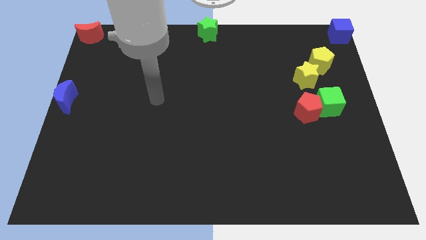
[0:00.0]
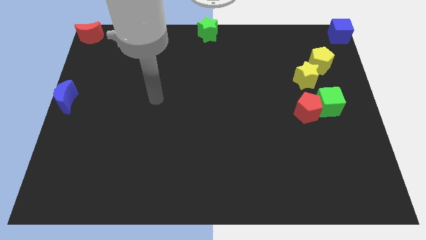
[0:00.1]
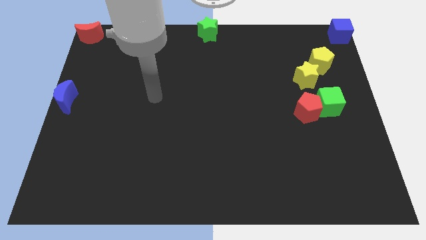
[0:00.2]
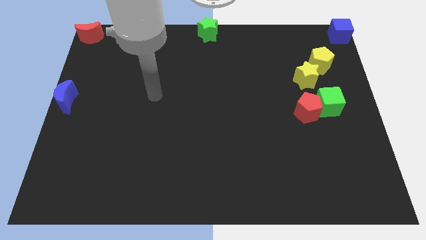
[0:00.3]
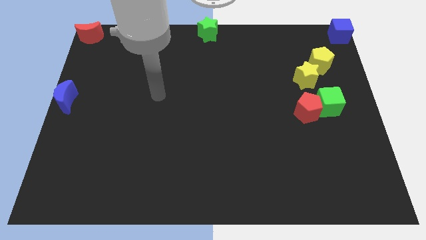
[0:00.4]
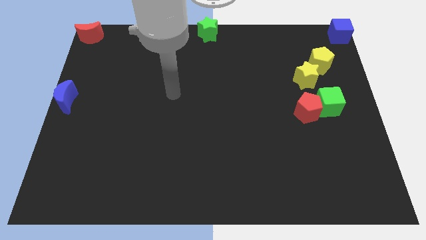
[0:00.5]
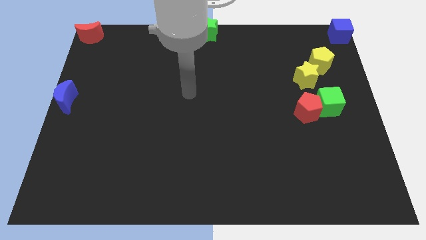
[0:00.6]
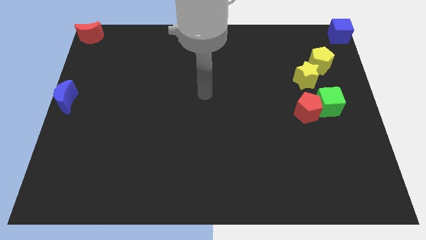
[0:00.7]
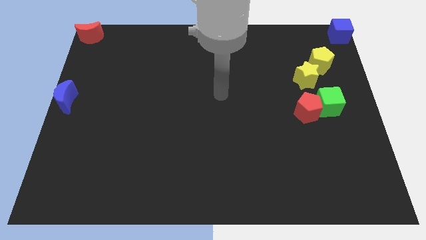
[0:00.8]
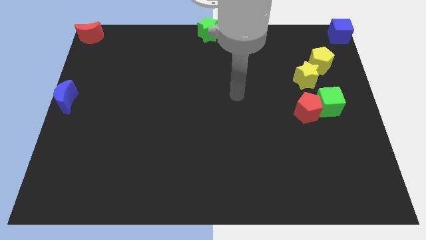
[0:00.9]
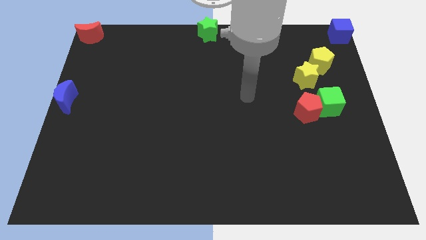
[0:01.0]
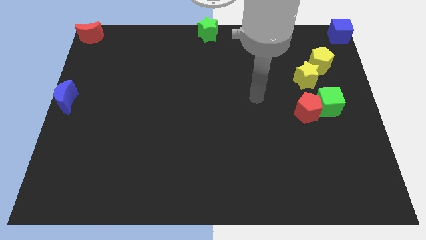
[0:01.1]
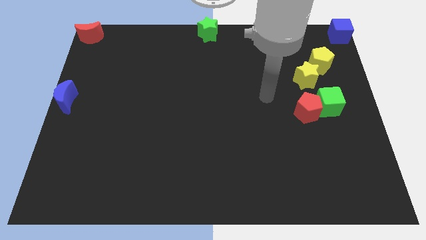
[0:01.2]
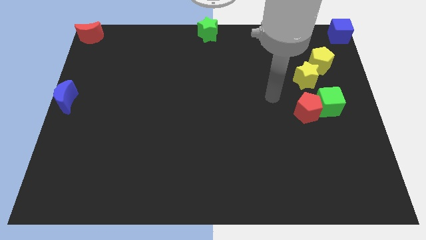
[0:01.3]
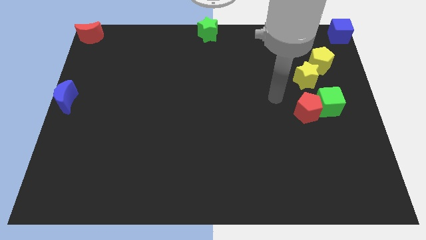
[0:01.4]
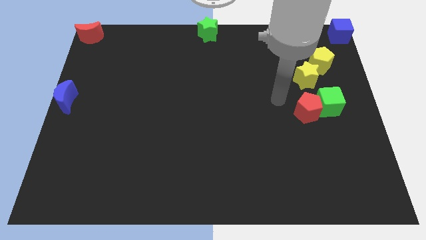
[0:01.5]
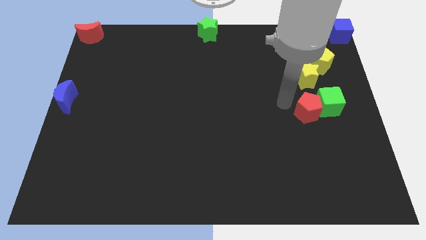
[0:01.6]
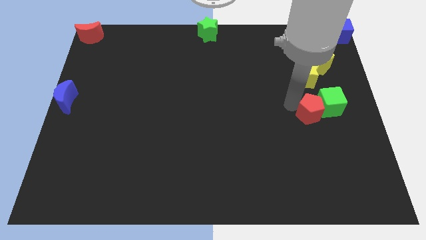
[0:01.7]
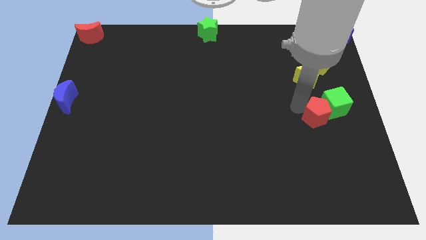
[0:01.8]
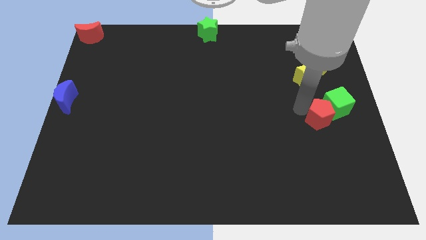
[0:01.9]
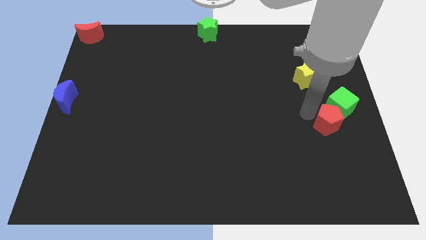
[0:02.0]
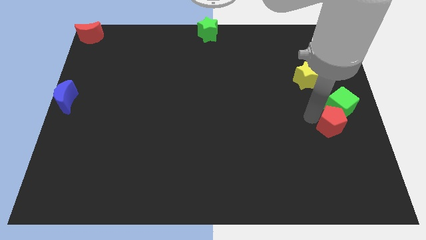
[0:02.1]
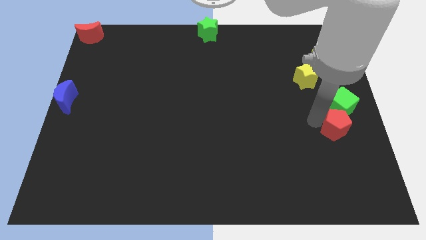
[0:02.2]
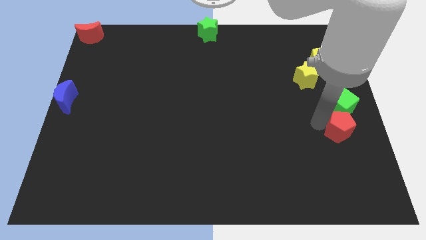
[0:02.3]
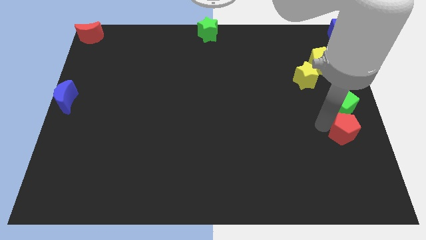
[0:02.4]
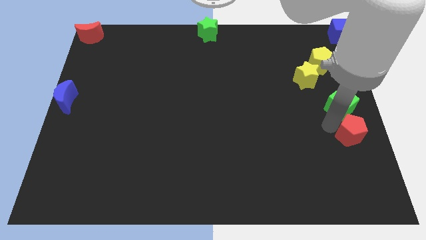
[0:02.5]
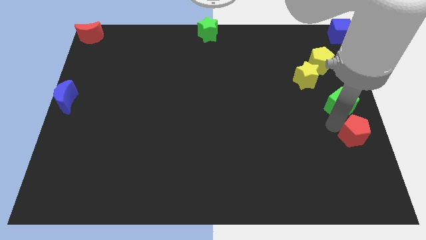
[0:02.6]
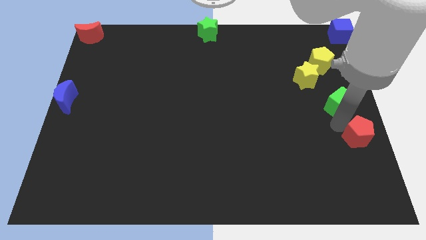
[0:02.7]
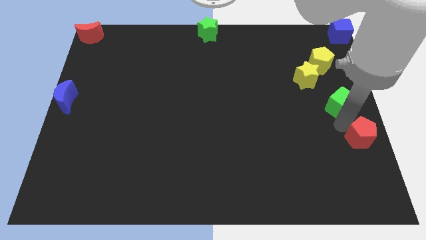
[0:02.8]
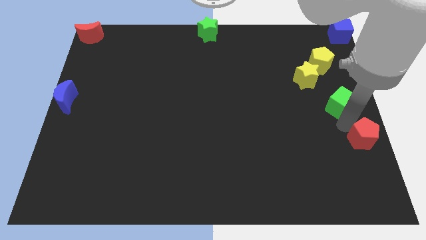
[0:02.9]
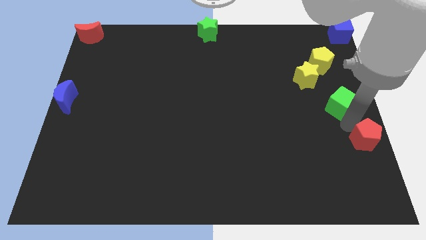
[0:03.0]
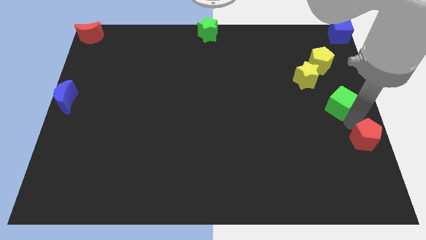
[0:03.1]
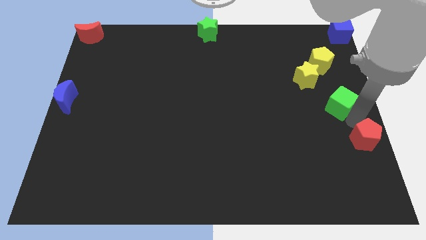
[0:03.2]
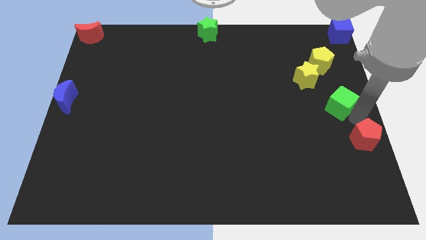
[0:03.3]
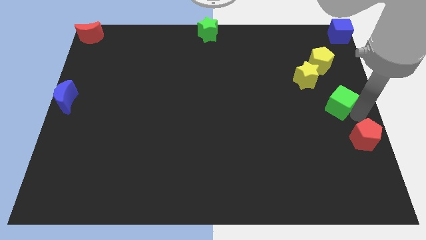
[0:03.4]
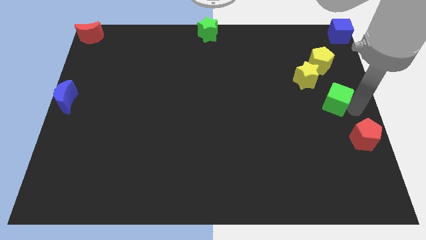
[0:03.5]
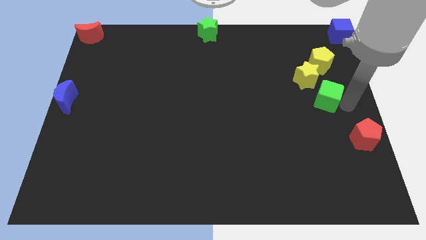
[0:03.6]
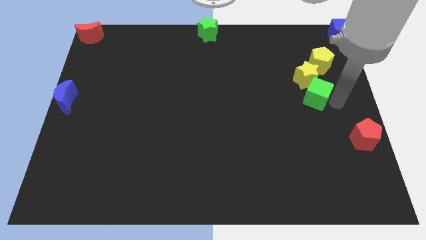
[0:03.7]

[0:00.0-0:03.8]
place red pentagon to the right center of the board

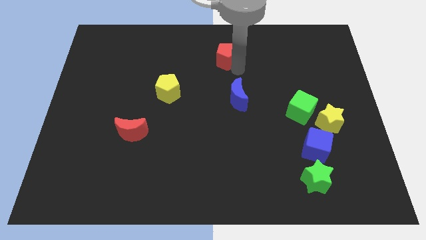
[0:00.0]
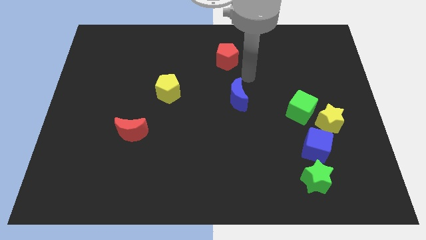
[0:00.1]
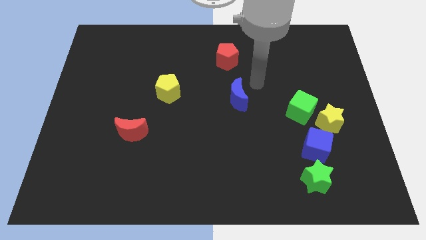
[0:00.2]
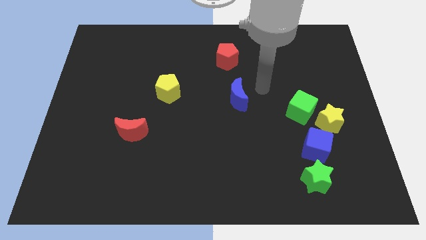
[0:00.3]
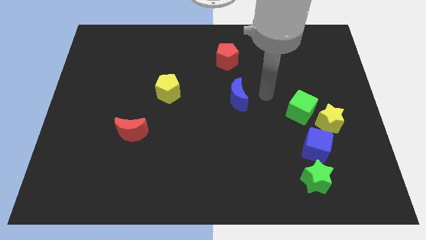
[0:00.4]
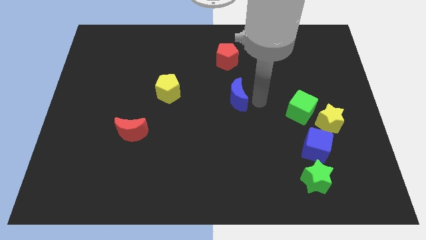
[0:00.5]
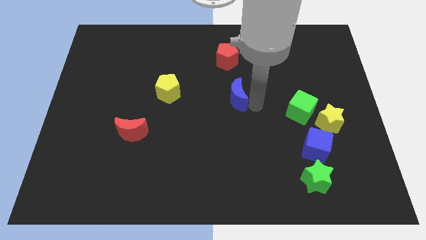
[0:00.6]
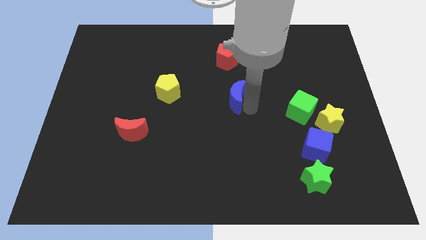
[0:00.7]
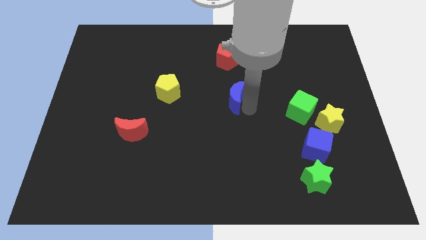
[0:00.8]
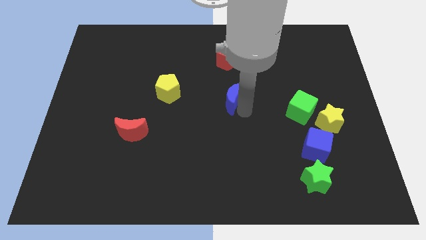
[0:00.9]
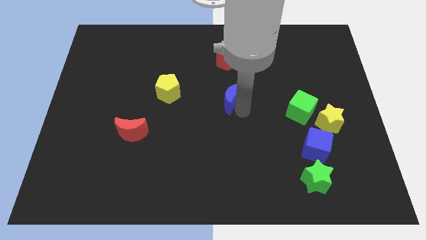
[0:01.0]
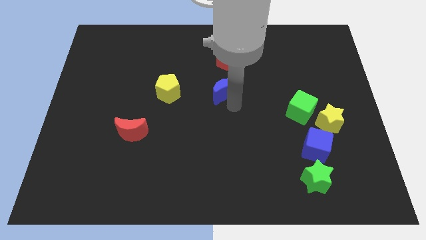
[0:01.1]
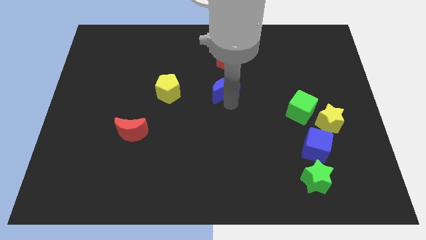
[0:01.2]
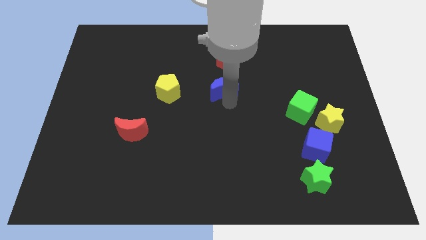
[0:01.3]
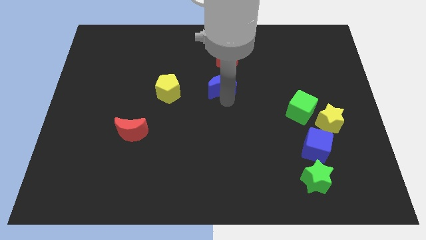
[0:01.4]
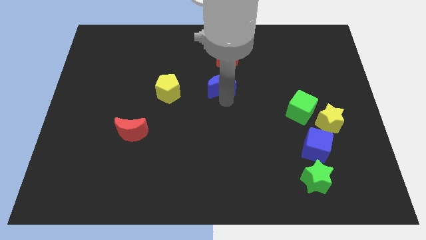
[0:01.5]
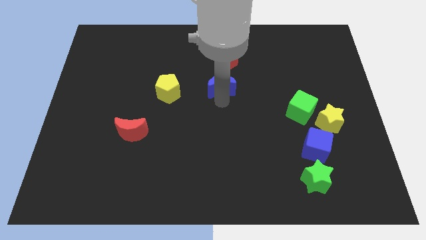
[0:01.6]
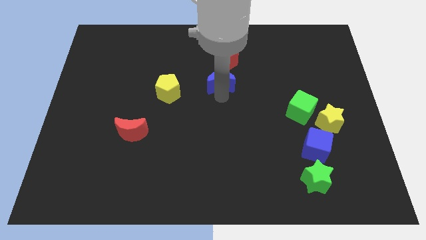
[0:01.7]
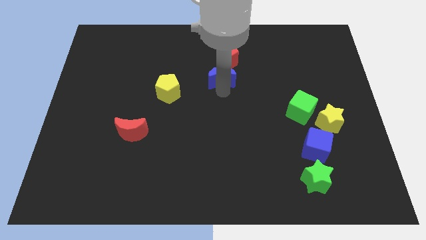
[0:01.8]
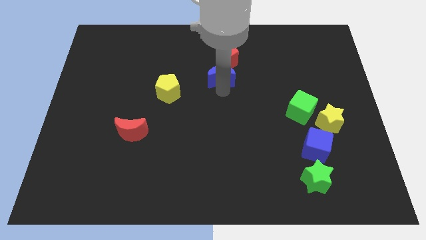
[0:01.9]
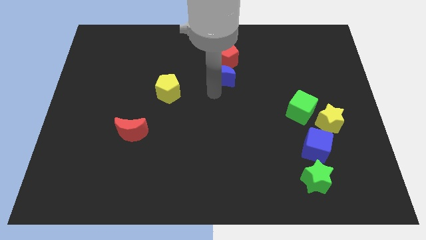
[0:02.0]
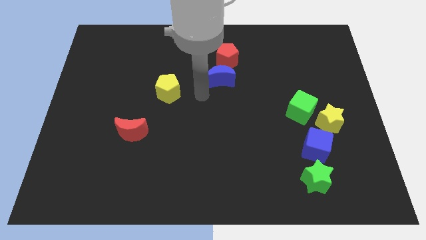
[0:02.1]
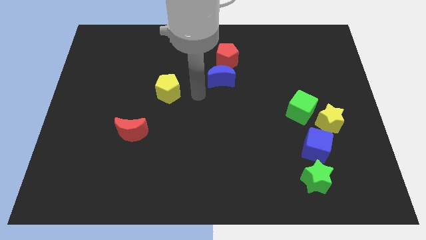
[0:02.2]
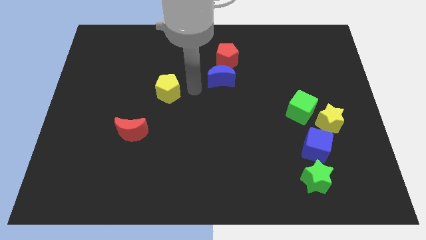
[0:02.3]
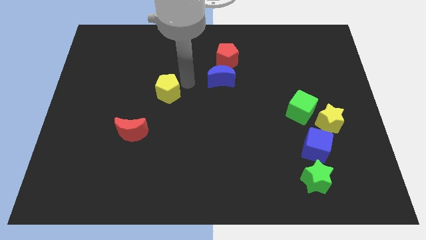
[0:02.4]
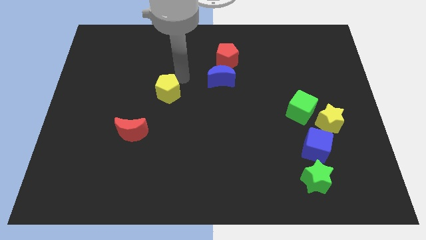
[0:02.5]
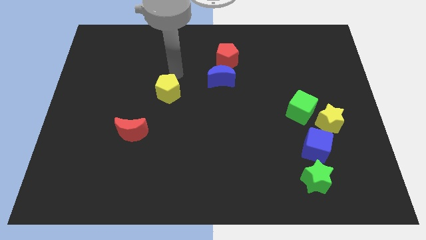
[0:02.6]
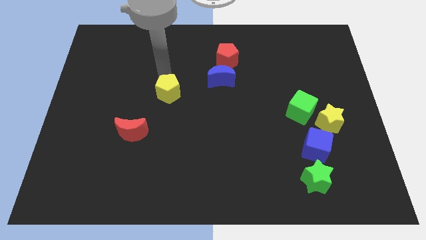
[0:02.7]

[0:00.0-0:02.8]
push the blue moon into the red pentagon

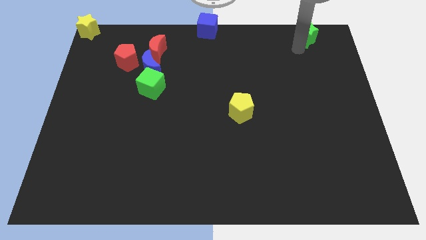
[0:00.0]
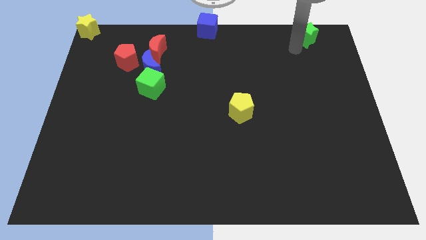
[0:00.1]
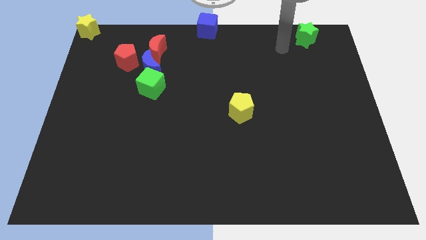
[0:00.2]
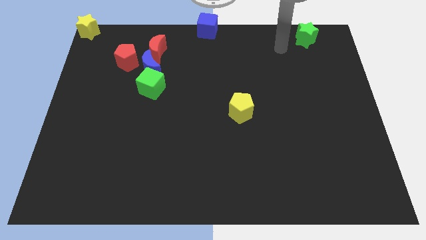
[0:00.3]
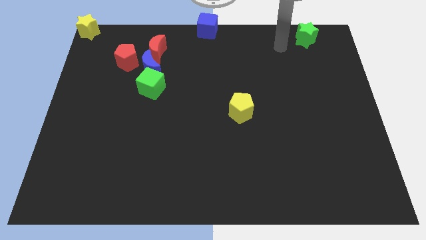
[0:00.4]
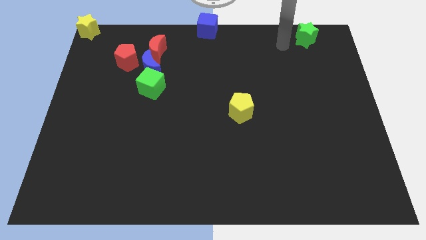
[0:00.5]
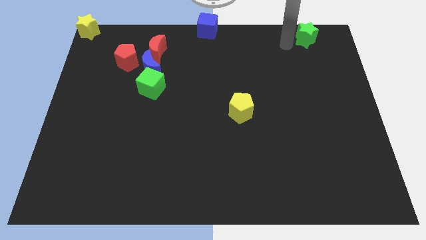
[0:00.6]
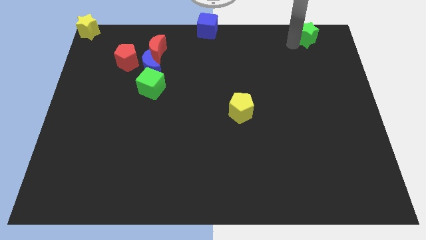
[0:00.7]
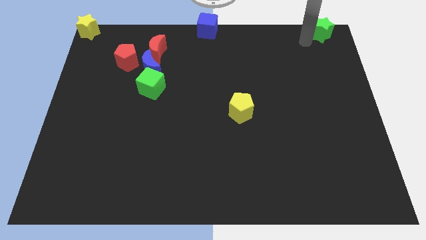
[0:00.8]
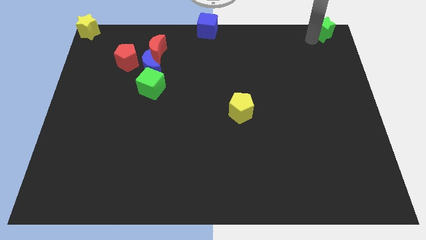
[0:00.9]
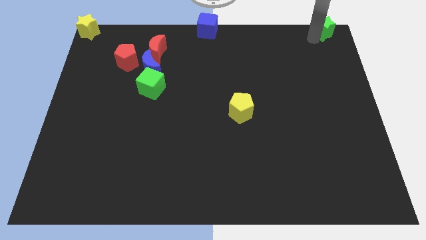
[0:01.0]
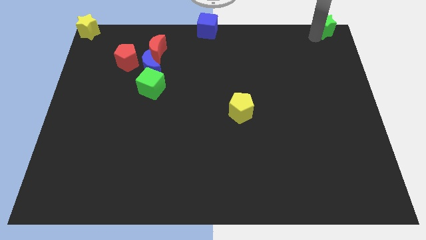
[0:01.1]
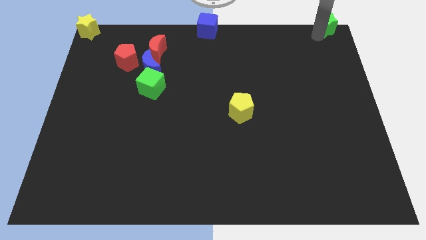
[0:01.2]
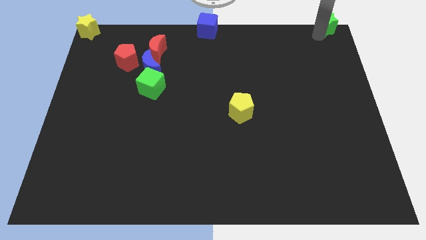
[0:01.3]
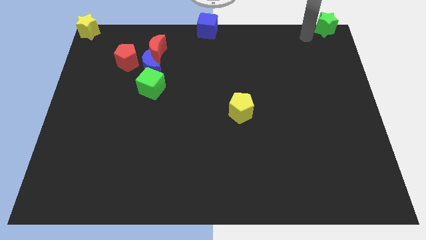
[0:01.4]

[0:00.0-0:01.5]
place the green star to the top right

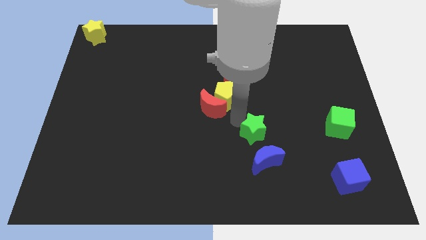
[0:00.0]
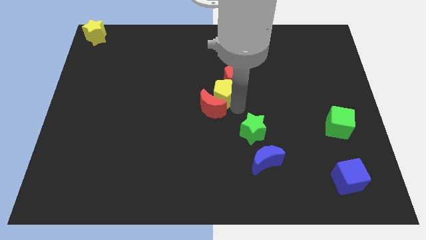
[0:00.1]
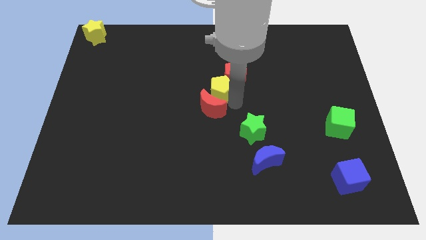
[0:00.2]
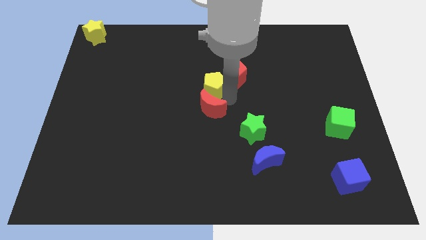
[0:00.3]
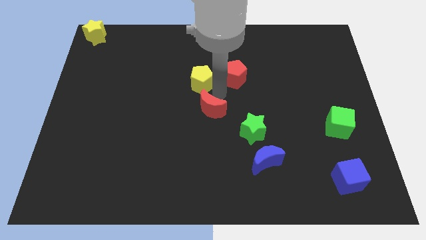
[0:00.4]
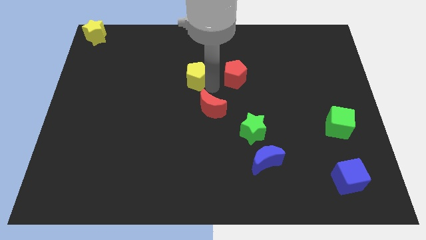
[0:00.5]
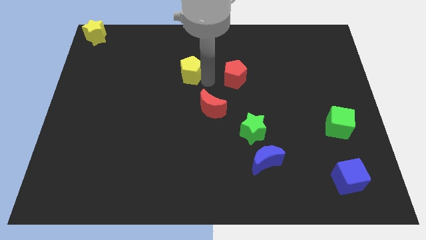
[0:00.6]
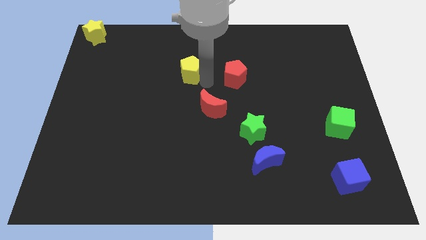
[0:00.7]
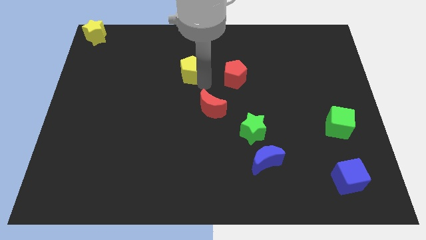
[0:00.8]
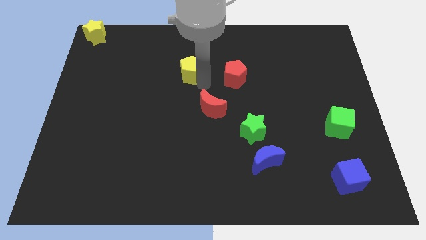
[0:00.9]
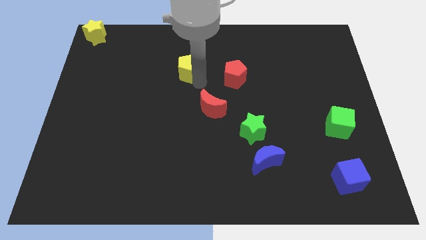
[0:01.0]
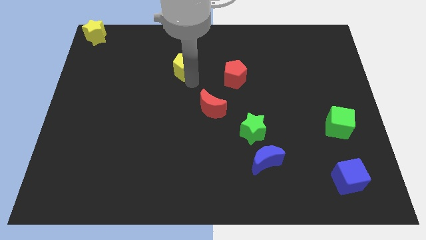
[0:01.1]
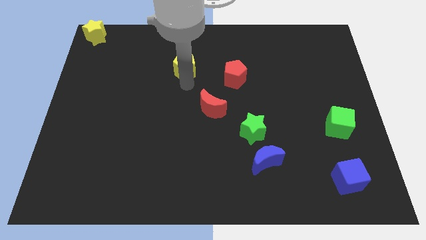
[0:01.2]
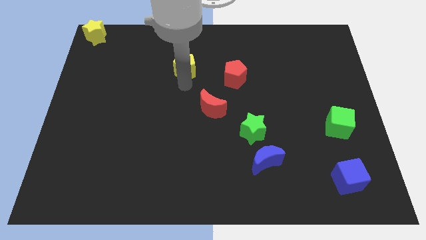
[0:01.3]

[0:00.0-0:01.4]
separate the yellow pentagon from the red crescent and red pentagon
